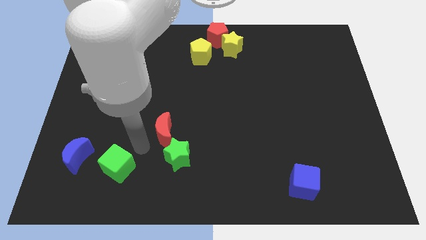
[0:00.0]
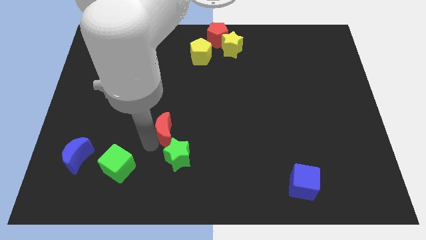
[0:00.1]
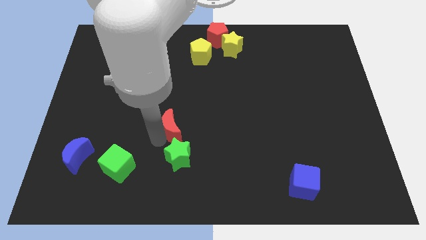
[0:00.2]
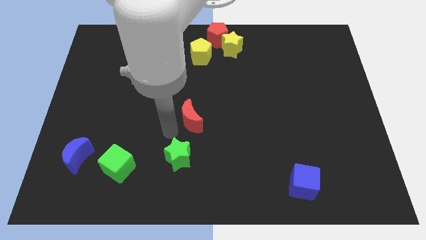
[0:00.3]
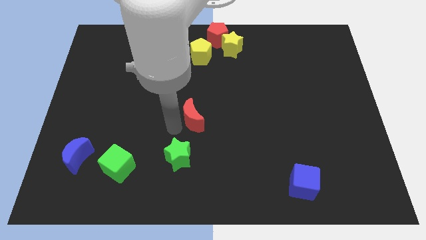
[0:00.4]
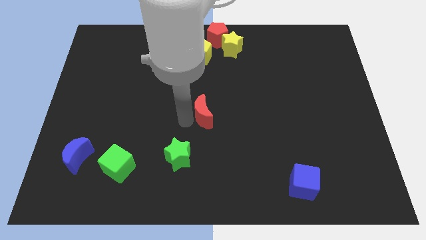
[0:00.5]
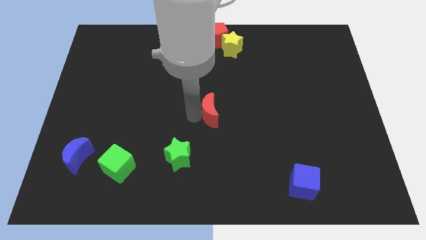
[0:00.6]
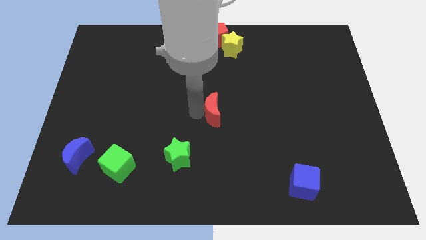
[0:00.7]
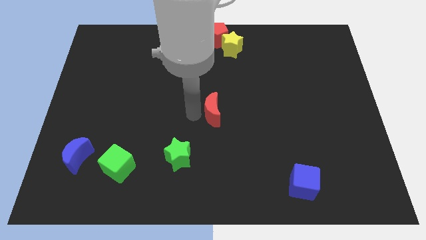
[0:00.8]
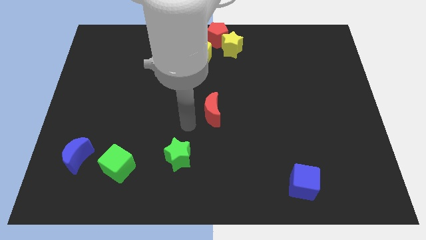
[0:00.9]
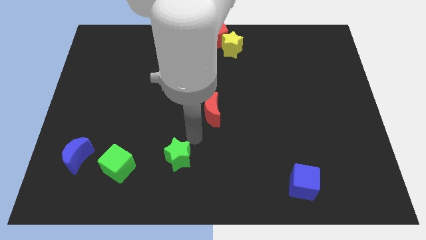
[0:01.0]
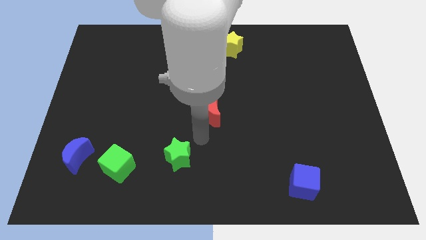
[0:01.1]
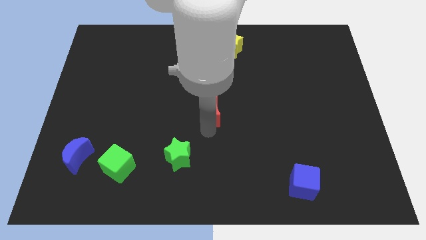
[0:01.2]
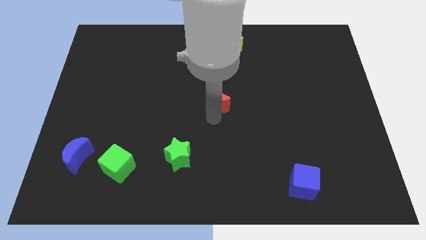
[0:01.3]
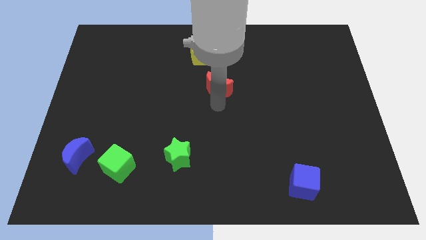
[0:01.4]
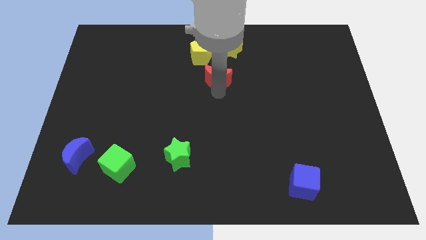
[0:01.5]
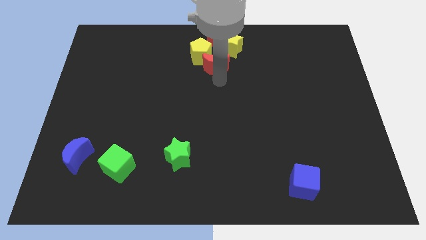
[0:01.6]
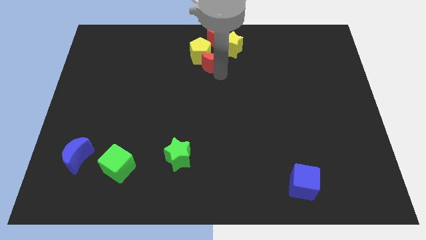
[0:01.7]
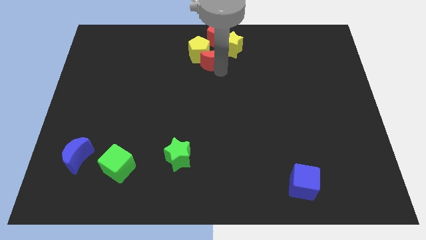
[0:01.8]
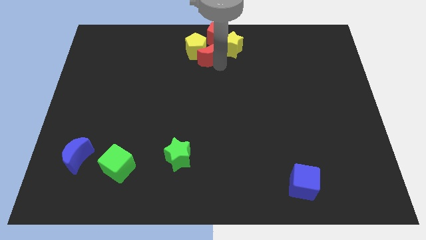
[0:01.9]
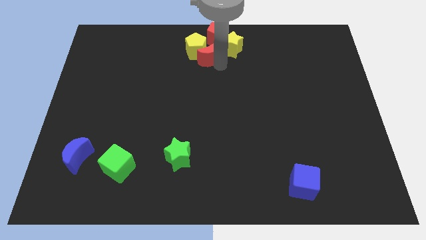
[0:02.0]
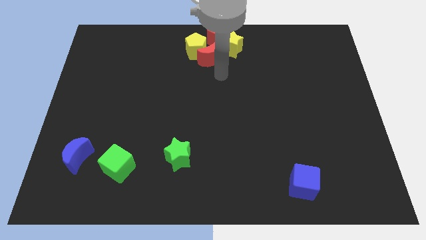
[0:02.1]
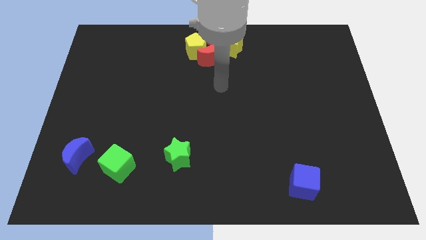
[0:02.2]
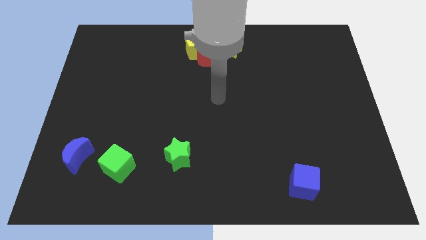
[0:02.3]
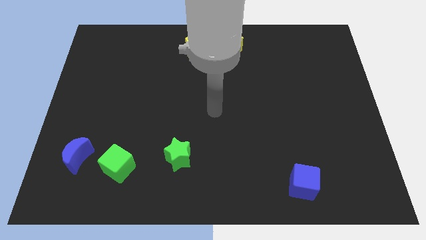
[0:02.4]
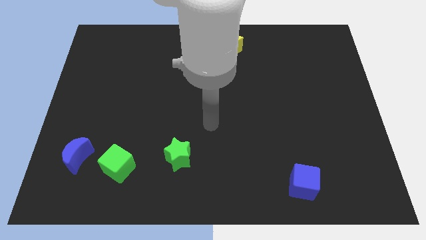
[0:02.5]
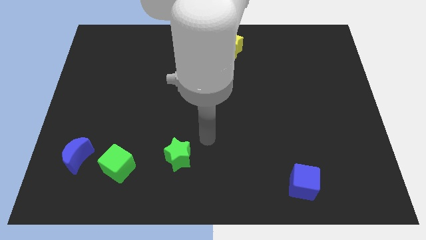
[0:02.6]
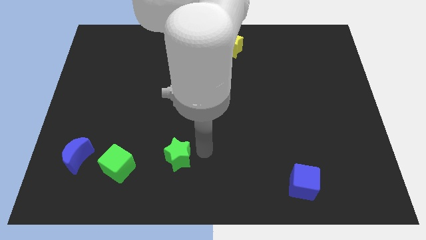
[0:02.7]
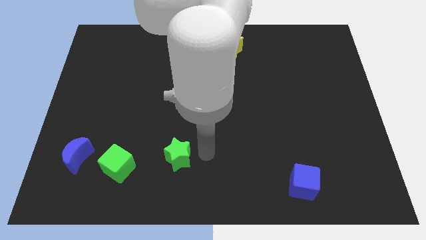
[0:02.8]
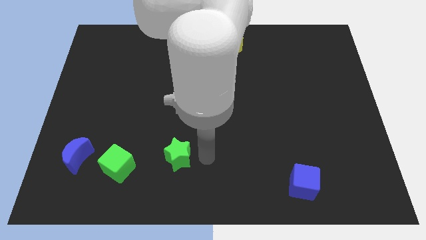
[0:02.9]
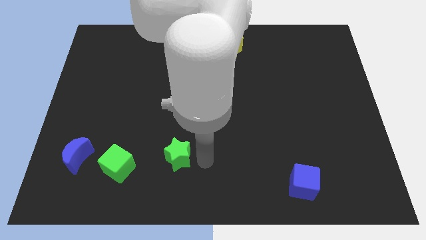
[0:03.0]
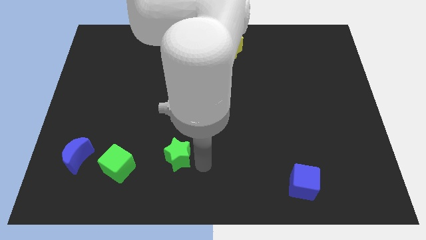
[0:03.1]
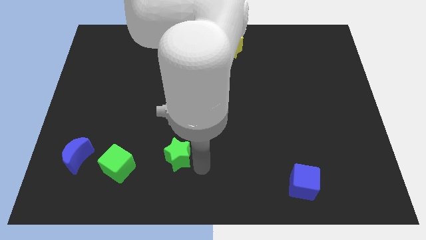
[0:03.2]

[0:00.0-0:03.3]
move red crescent to the right side of the yellow pentagon

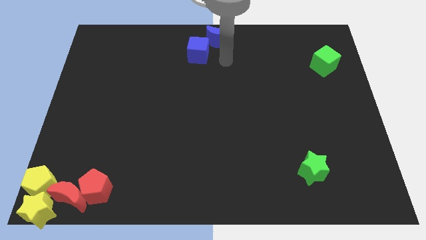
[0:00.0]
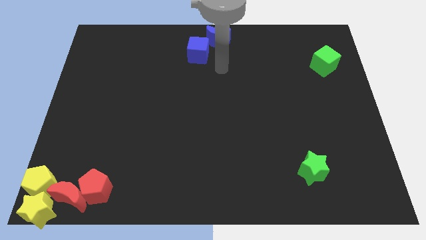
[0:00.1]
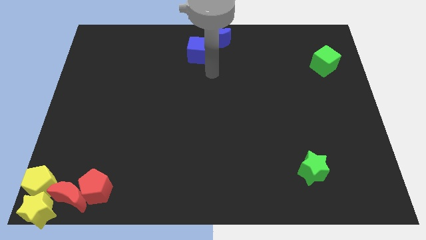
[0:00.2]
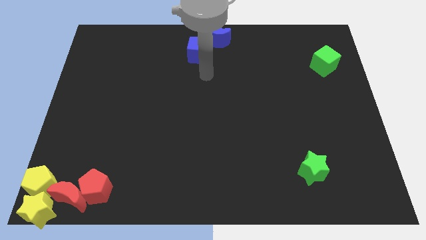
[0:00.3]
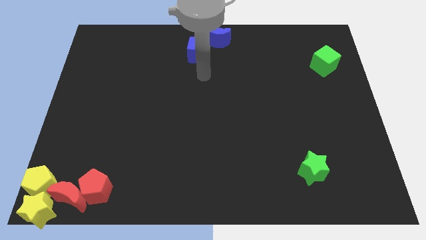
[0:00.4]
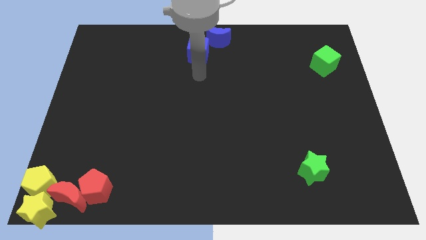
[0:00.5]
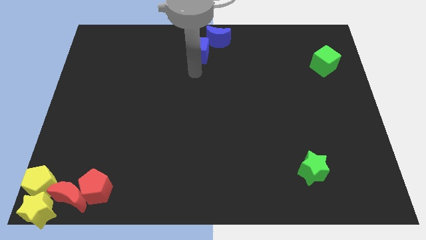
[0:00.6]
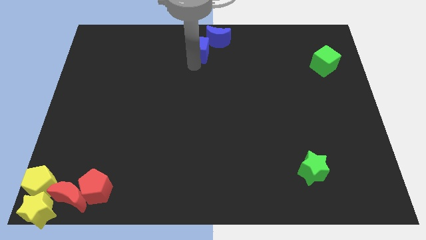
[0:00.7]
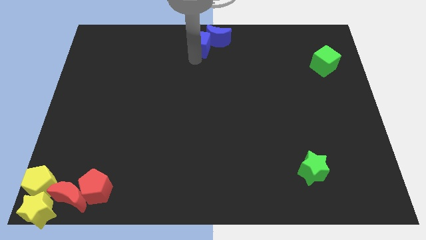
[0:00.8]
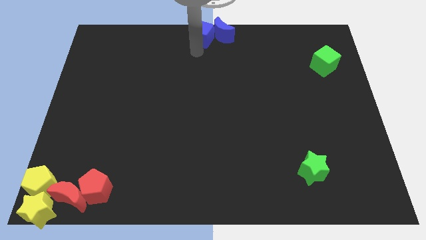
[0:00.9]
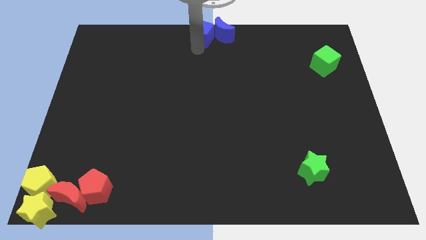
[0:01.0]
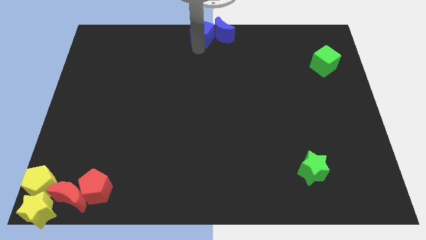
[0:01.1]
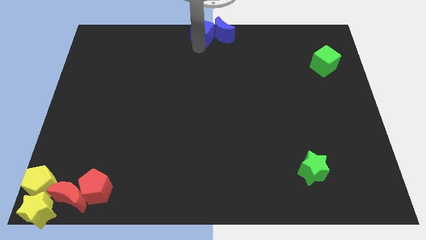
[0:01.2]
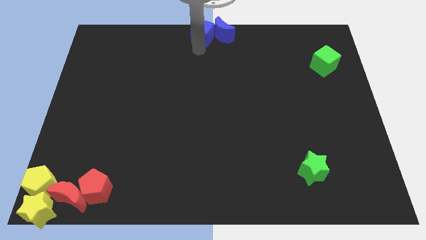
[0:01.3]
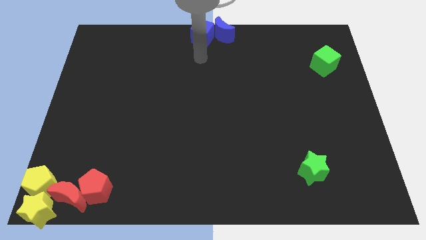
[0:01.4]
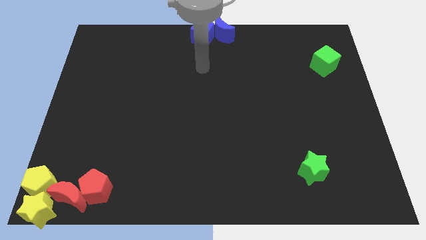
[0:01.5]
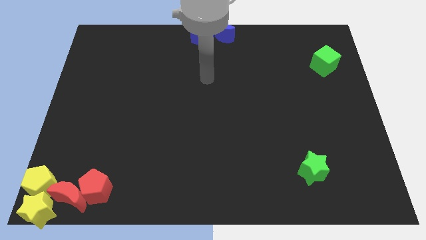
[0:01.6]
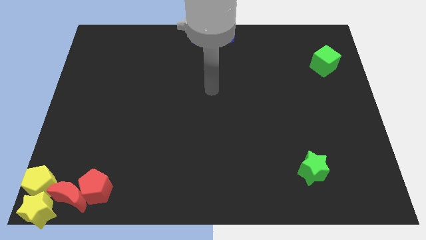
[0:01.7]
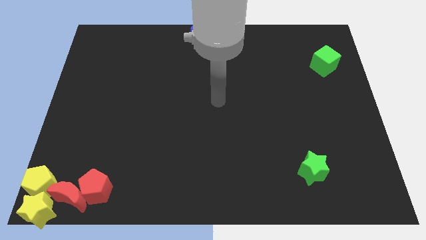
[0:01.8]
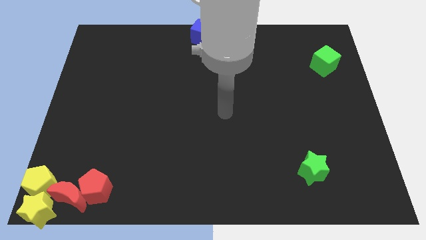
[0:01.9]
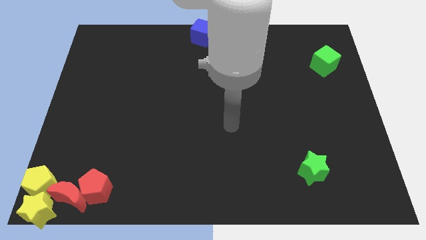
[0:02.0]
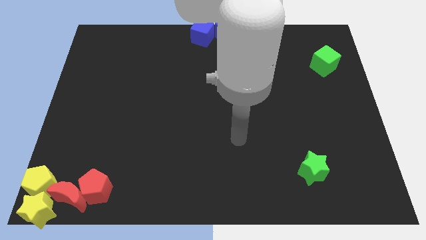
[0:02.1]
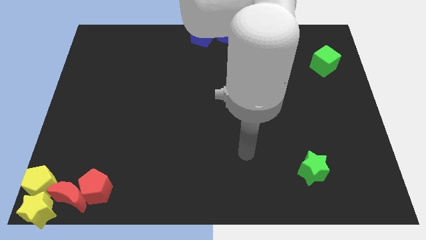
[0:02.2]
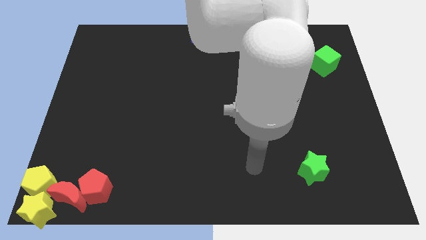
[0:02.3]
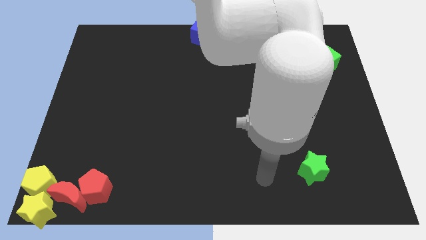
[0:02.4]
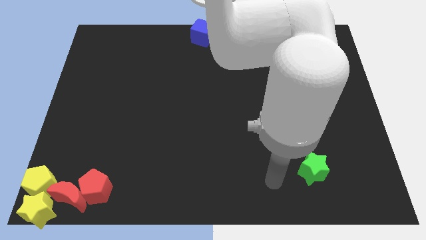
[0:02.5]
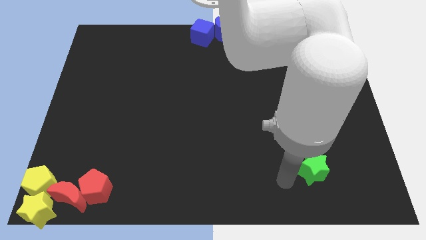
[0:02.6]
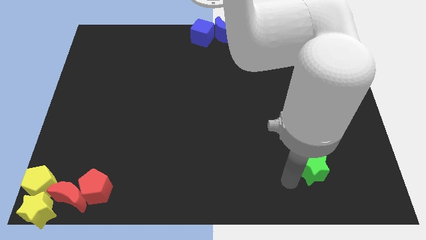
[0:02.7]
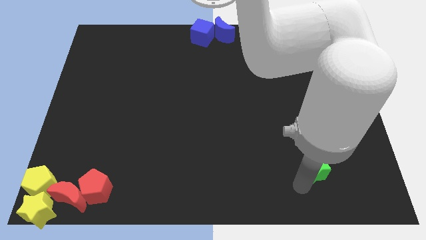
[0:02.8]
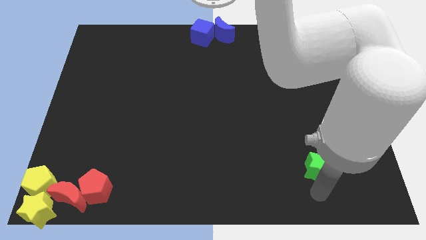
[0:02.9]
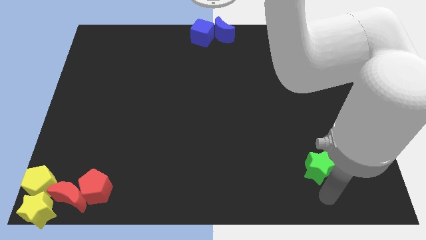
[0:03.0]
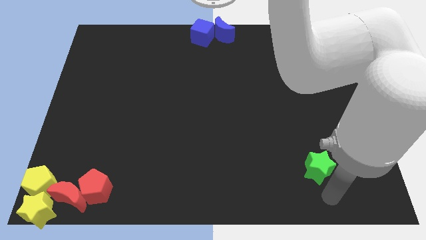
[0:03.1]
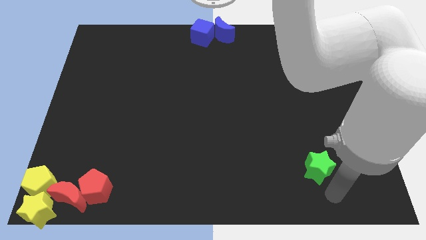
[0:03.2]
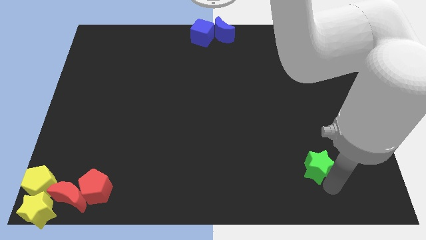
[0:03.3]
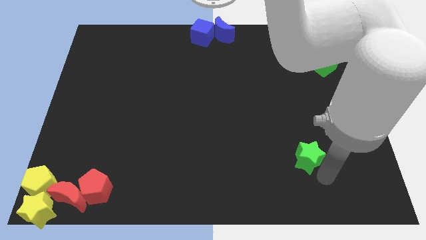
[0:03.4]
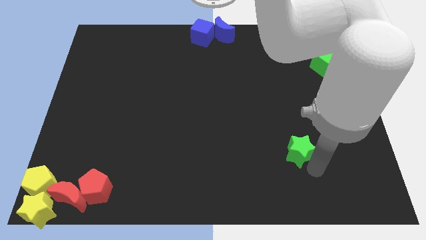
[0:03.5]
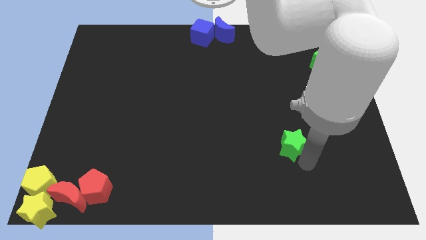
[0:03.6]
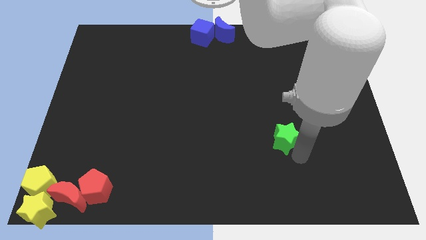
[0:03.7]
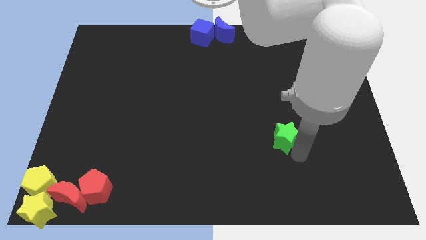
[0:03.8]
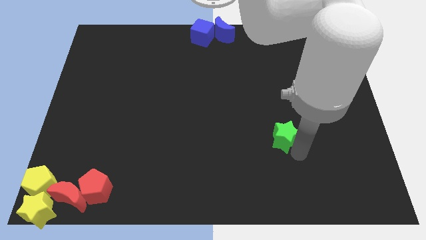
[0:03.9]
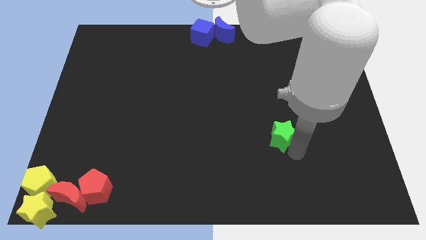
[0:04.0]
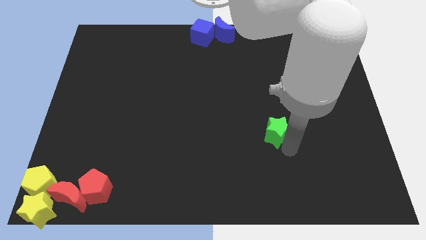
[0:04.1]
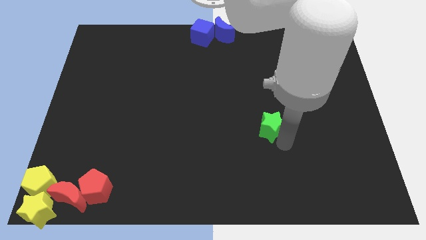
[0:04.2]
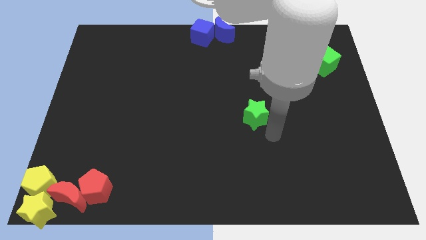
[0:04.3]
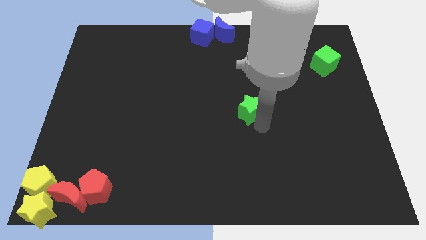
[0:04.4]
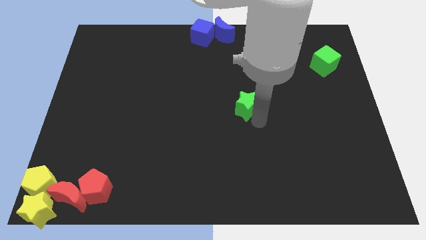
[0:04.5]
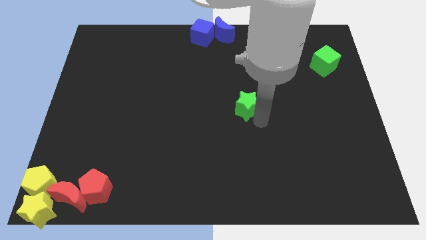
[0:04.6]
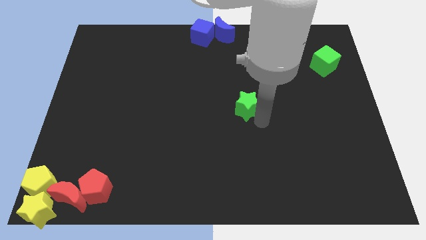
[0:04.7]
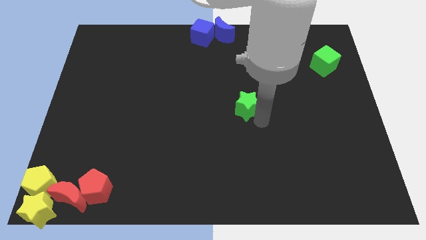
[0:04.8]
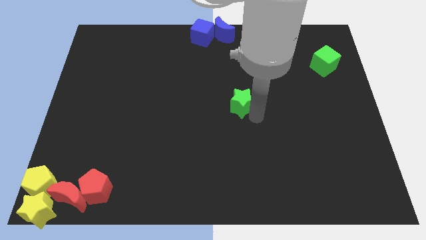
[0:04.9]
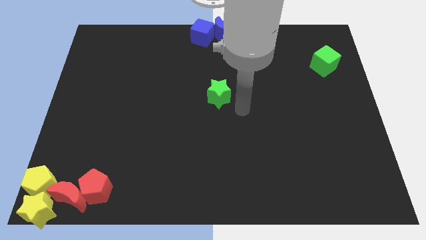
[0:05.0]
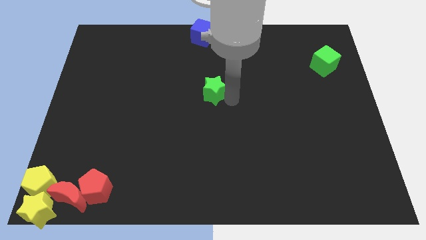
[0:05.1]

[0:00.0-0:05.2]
push green star towards top

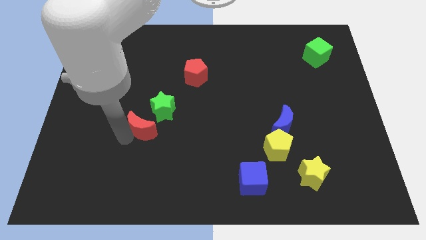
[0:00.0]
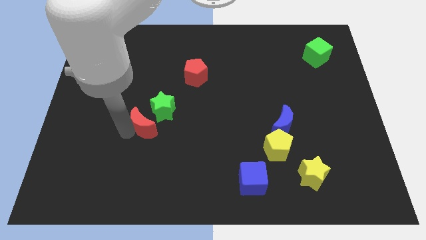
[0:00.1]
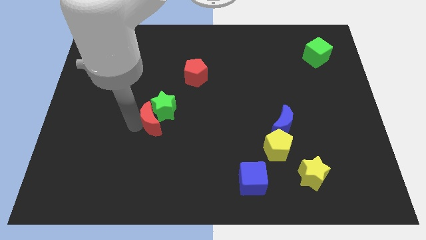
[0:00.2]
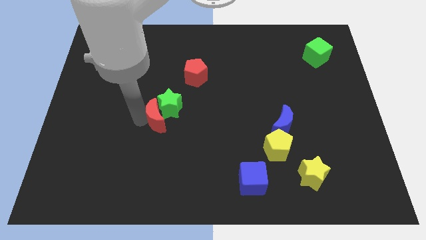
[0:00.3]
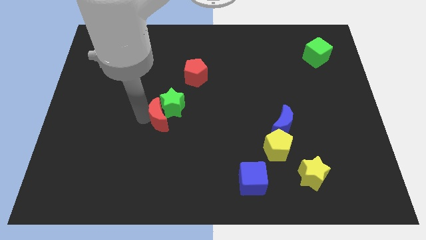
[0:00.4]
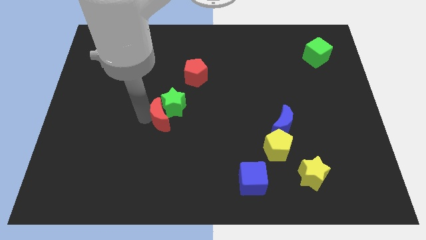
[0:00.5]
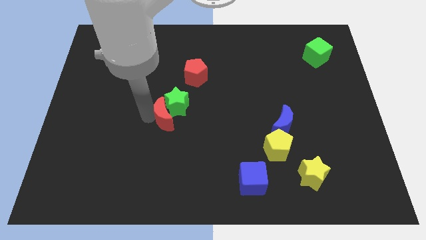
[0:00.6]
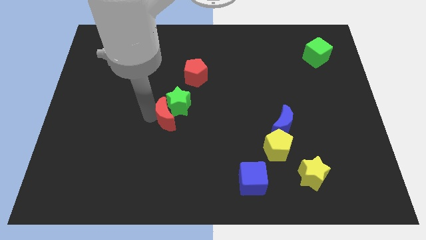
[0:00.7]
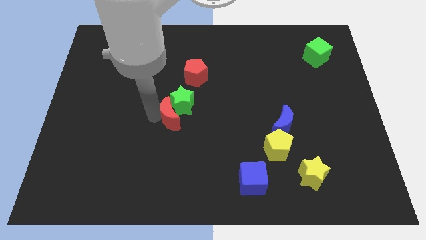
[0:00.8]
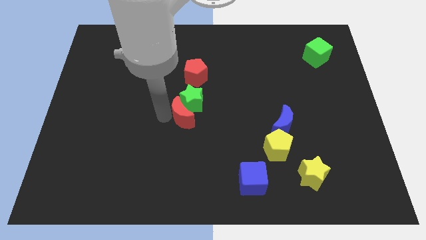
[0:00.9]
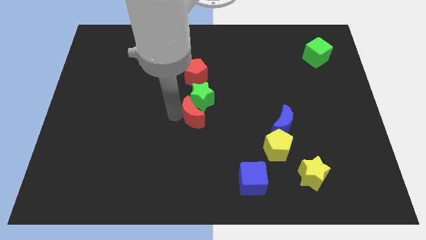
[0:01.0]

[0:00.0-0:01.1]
push the red crescent into the green star
